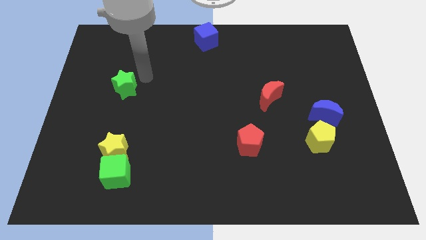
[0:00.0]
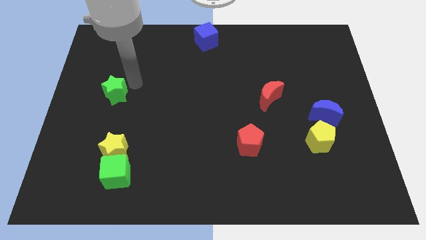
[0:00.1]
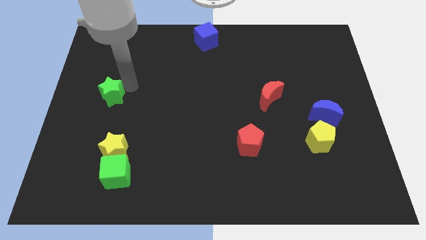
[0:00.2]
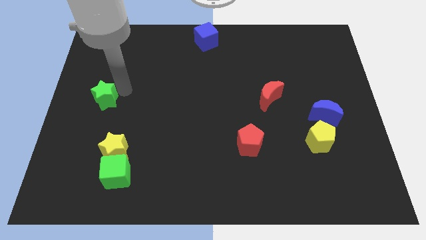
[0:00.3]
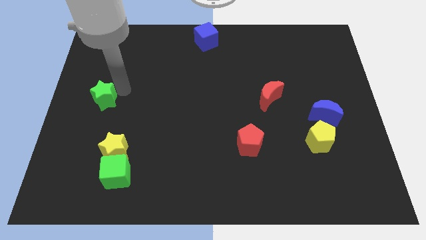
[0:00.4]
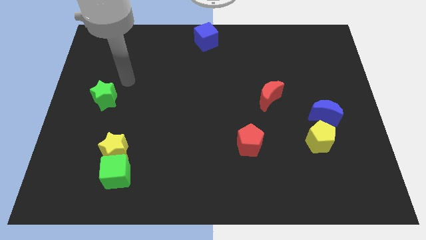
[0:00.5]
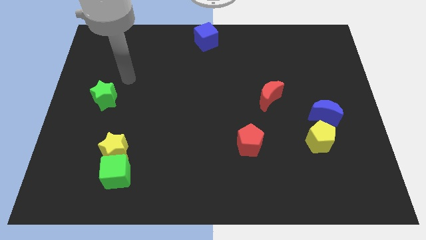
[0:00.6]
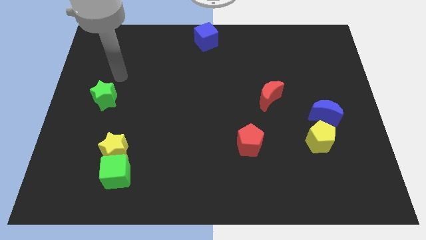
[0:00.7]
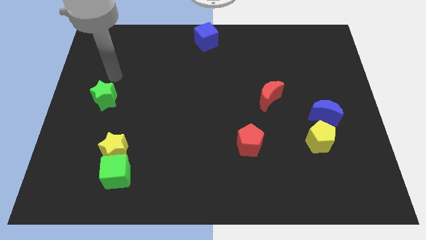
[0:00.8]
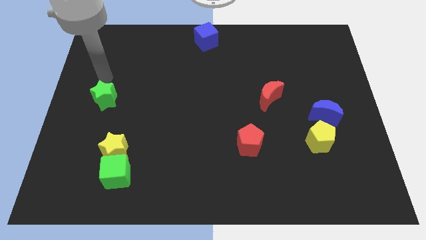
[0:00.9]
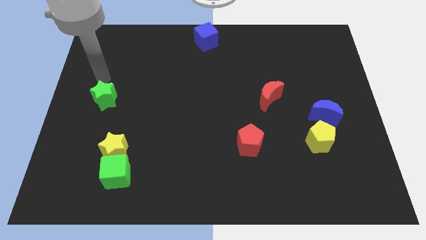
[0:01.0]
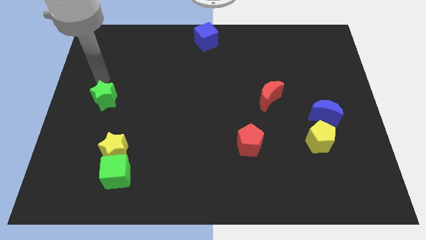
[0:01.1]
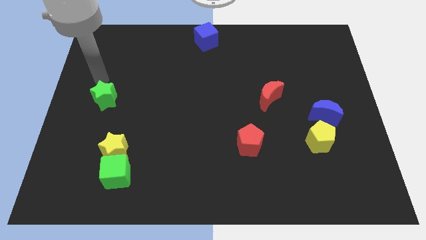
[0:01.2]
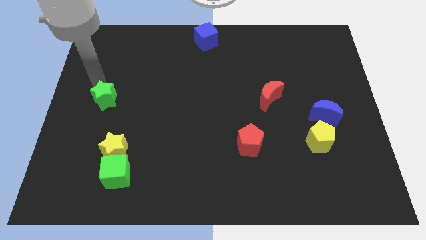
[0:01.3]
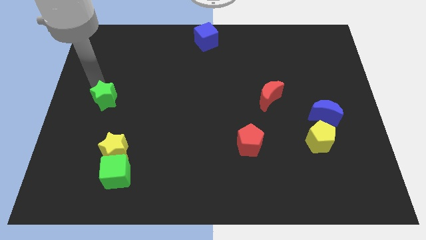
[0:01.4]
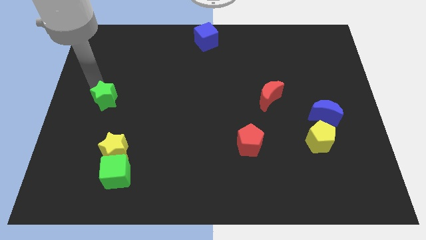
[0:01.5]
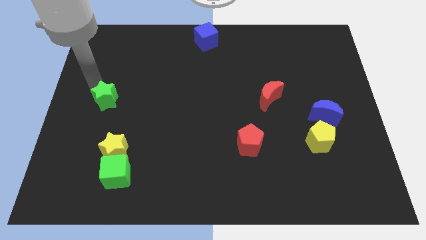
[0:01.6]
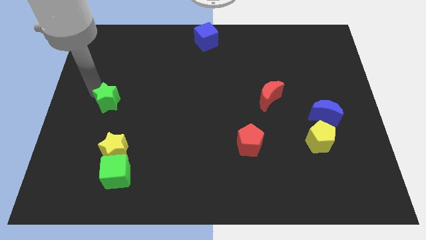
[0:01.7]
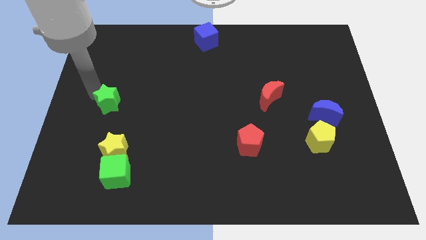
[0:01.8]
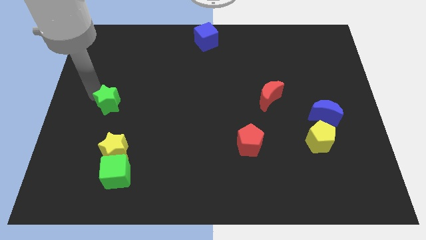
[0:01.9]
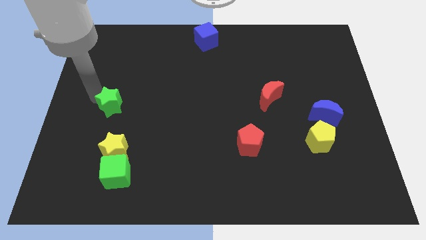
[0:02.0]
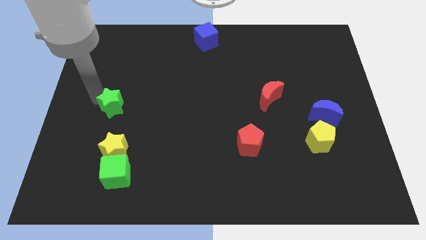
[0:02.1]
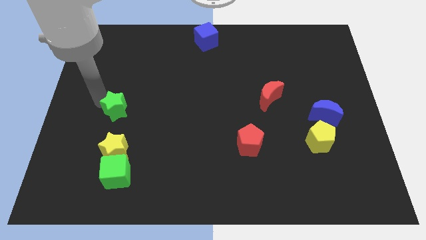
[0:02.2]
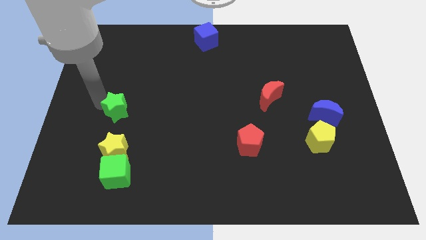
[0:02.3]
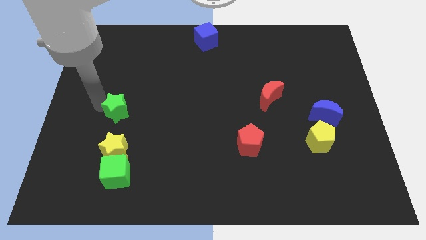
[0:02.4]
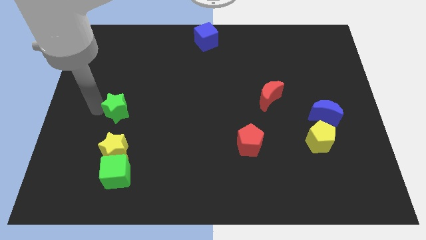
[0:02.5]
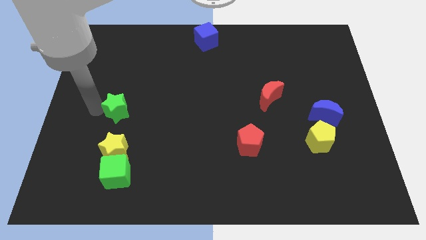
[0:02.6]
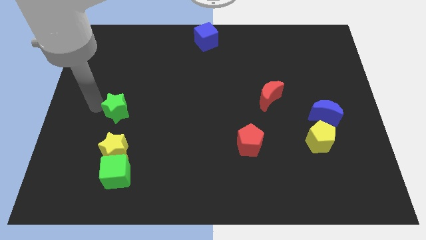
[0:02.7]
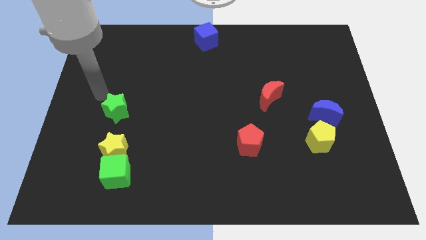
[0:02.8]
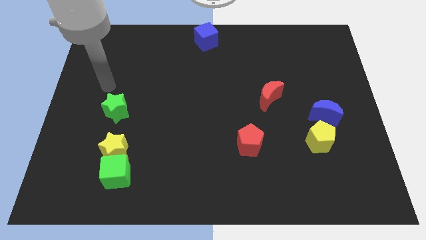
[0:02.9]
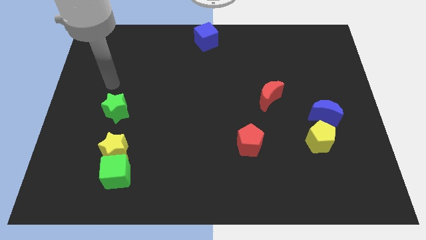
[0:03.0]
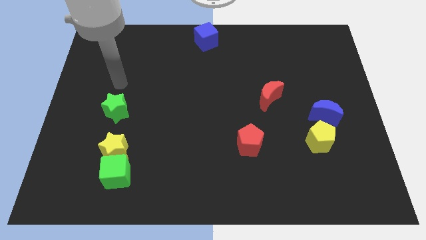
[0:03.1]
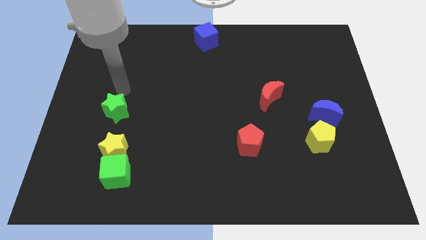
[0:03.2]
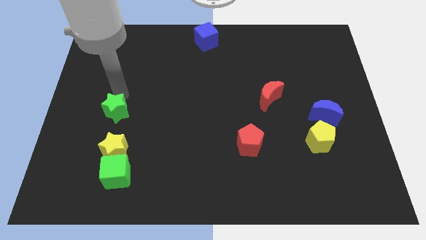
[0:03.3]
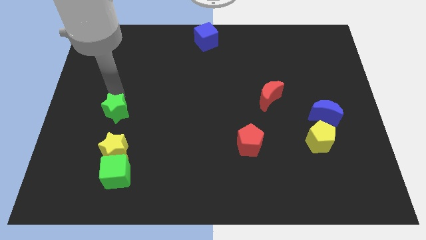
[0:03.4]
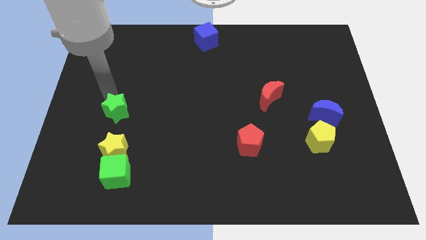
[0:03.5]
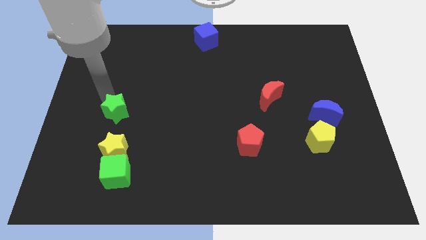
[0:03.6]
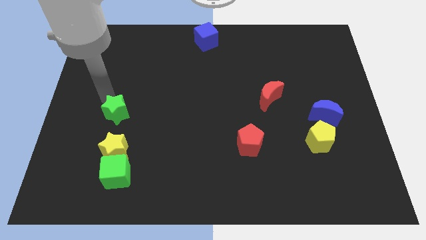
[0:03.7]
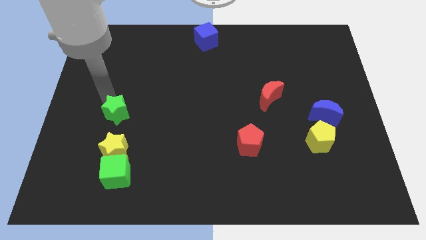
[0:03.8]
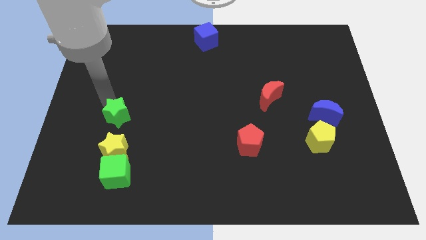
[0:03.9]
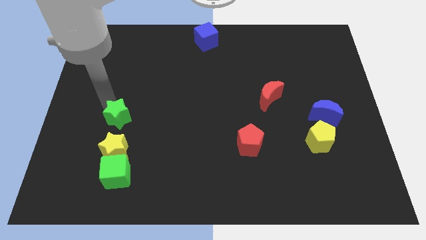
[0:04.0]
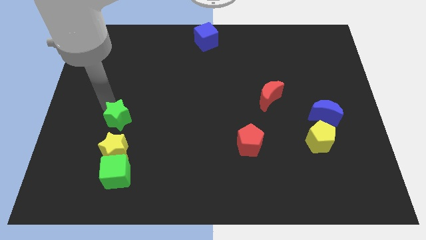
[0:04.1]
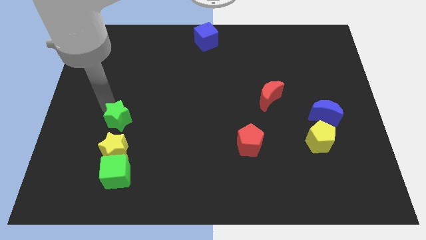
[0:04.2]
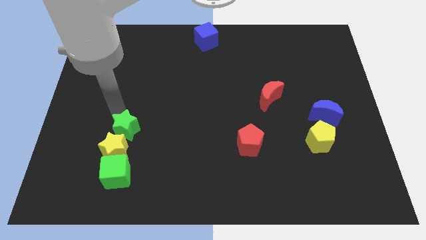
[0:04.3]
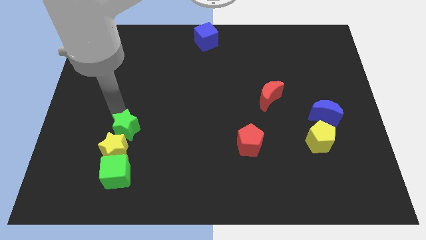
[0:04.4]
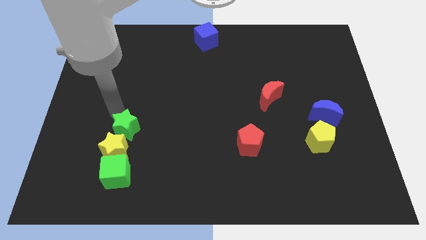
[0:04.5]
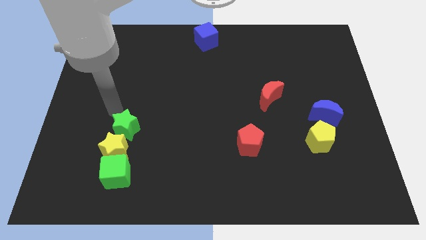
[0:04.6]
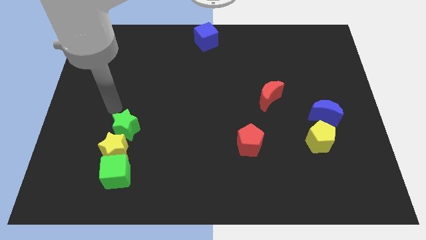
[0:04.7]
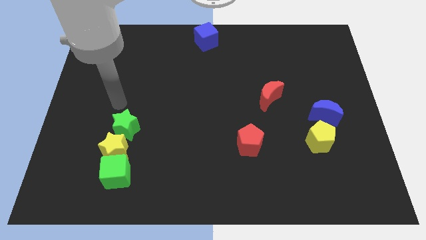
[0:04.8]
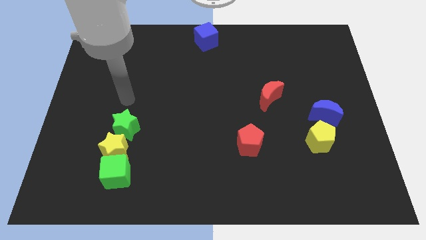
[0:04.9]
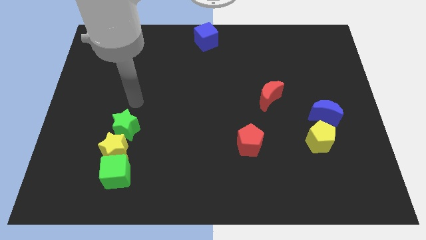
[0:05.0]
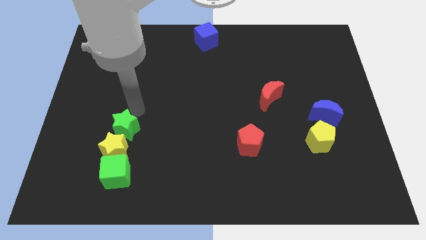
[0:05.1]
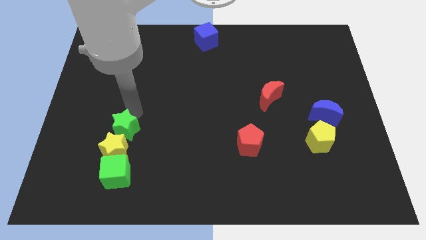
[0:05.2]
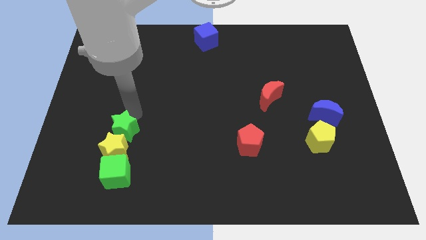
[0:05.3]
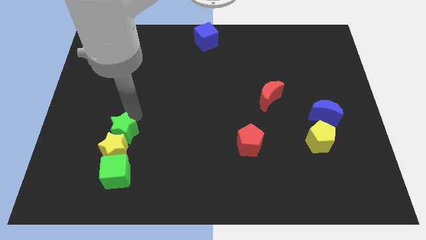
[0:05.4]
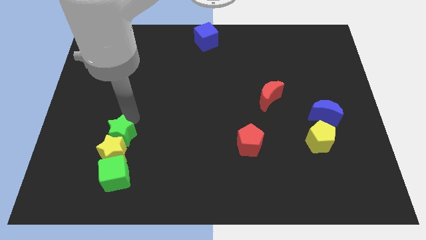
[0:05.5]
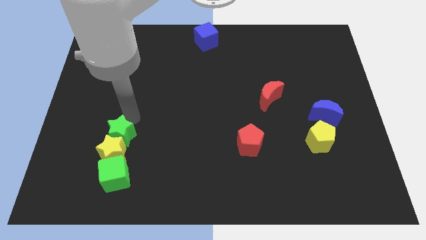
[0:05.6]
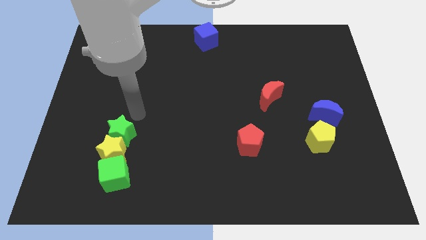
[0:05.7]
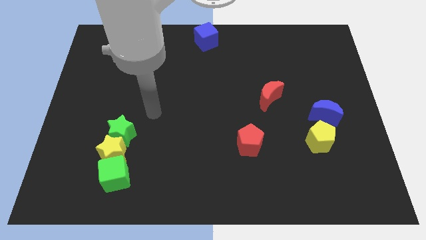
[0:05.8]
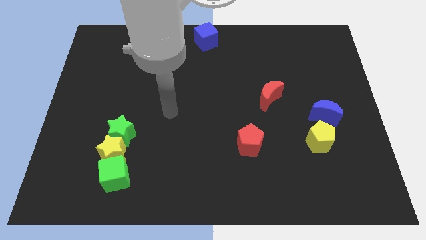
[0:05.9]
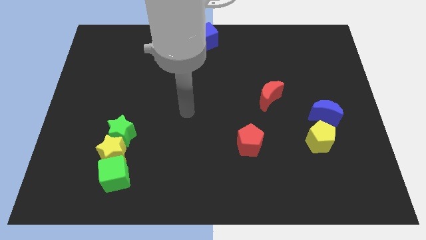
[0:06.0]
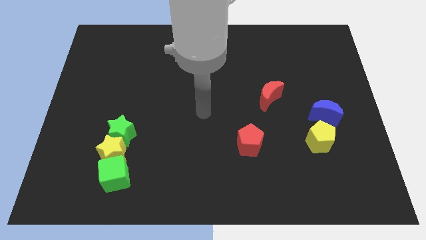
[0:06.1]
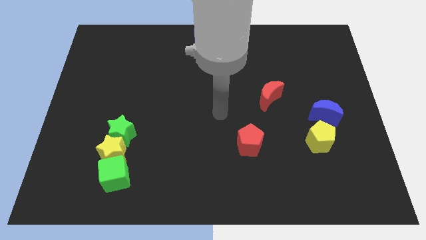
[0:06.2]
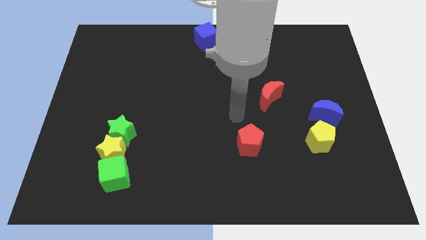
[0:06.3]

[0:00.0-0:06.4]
push the green star into the yellow star and green cube

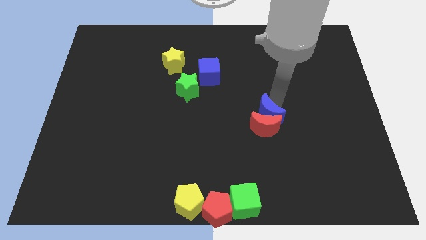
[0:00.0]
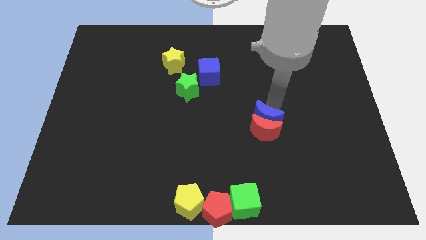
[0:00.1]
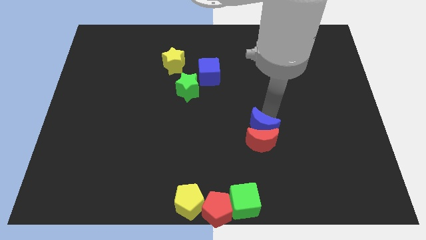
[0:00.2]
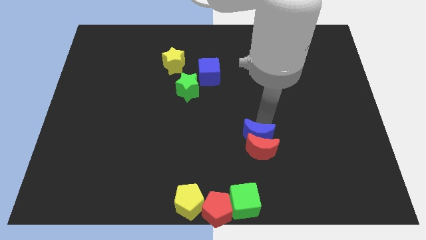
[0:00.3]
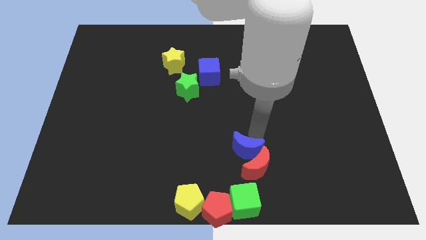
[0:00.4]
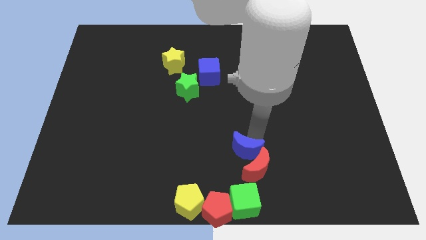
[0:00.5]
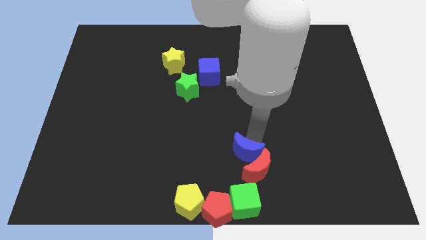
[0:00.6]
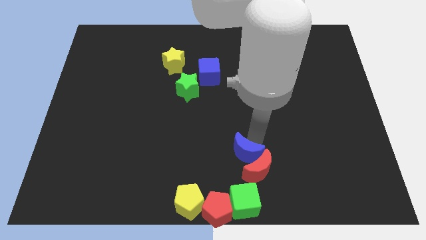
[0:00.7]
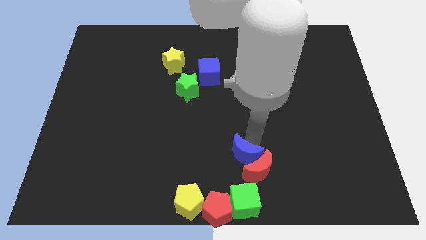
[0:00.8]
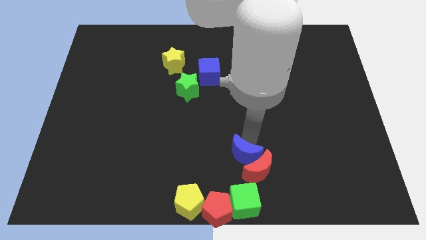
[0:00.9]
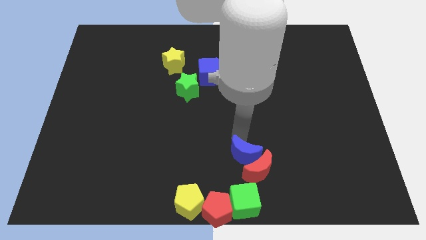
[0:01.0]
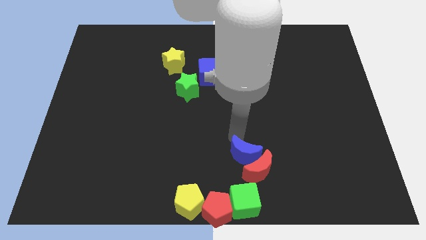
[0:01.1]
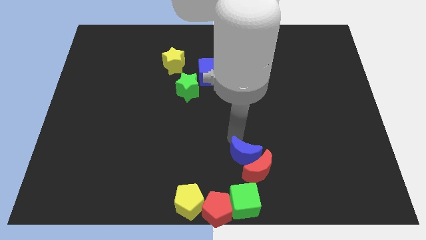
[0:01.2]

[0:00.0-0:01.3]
drag the red moon and blue moon towards the bottom of the board

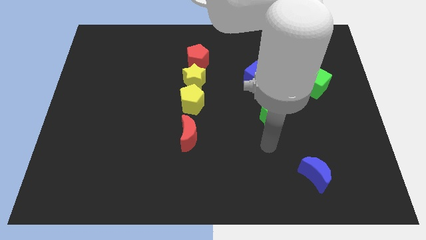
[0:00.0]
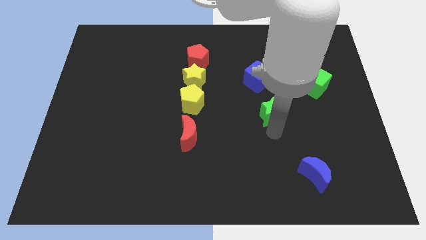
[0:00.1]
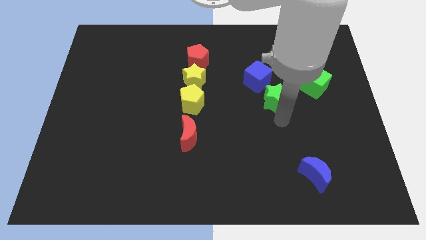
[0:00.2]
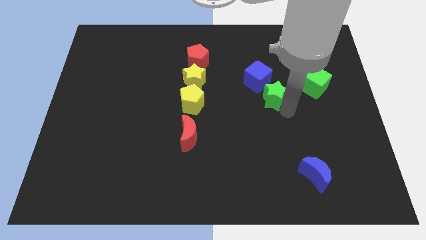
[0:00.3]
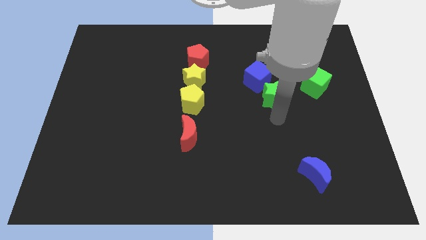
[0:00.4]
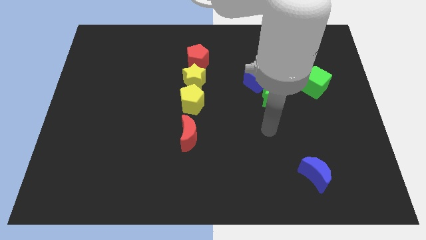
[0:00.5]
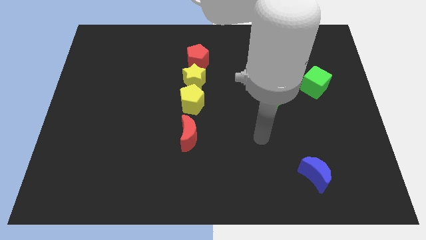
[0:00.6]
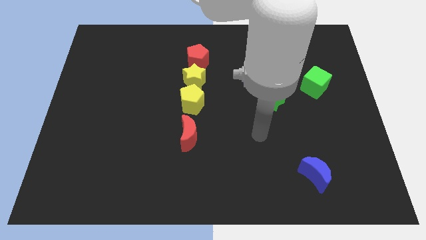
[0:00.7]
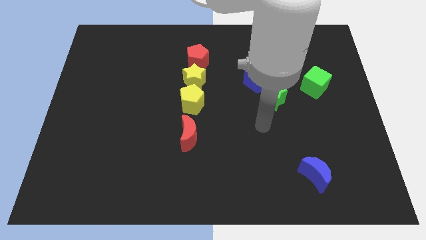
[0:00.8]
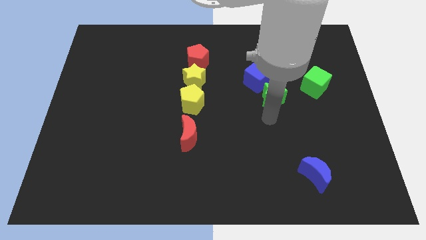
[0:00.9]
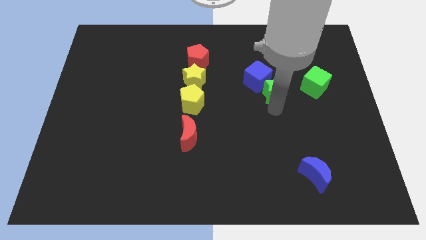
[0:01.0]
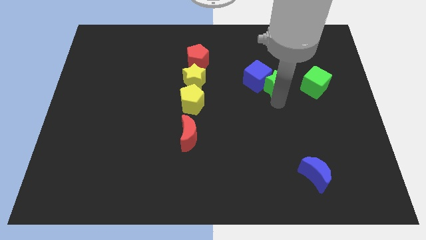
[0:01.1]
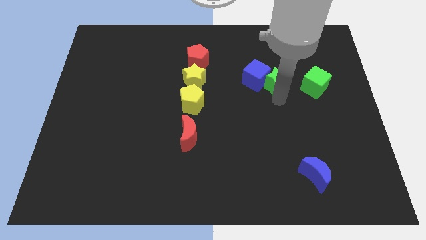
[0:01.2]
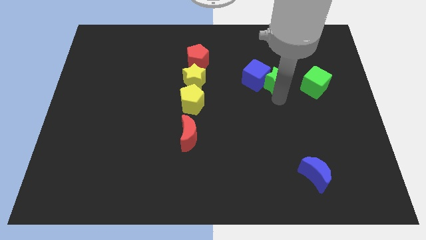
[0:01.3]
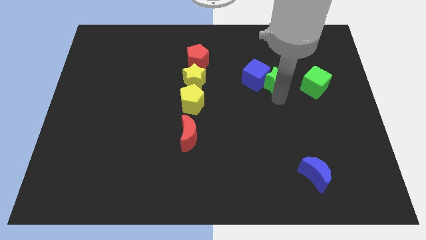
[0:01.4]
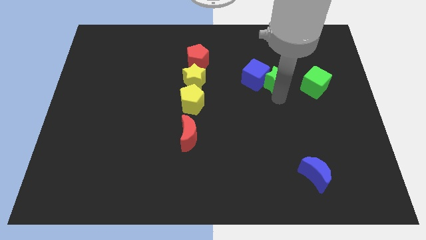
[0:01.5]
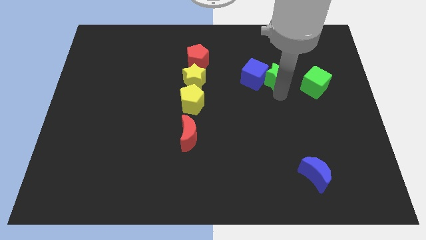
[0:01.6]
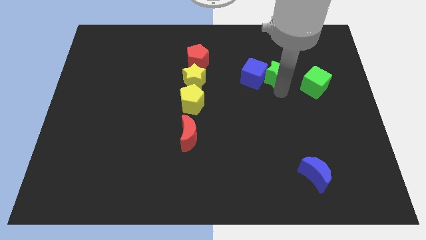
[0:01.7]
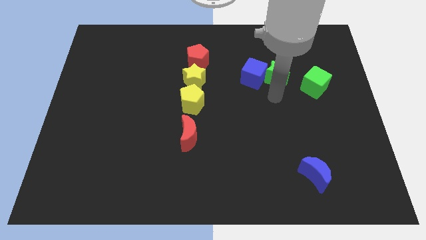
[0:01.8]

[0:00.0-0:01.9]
move the green star to right of the blue cube
